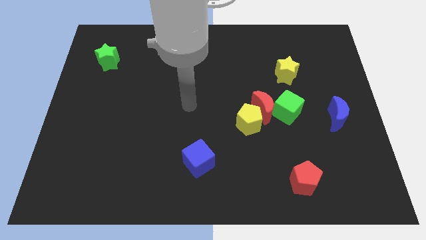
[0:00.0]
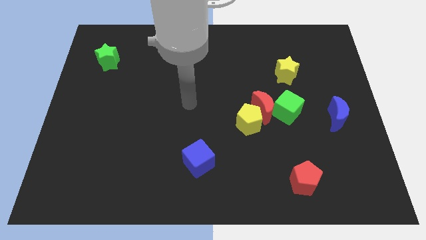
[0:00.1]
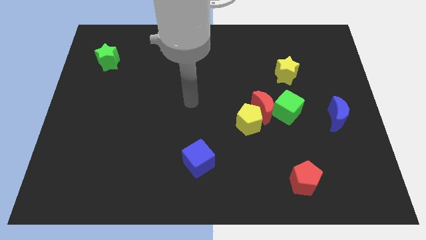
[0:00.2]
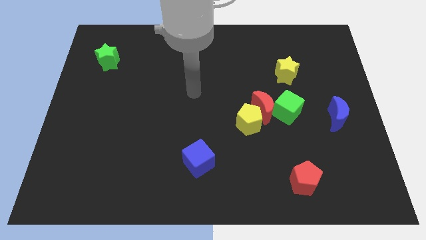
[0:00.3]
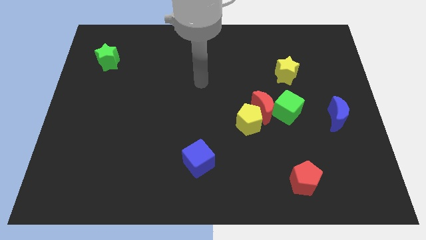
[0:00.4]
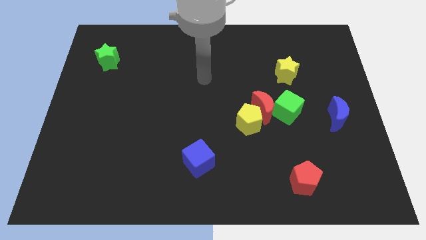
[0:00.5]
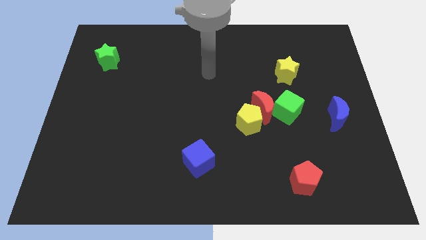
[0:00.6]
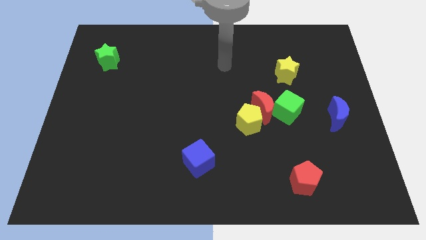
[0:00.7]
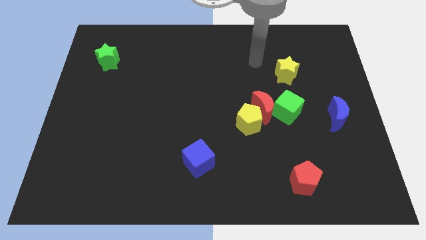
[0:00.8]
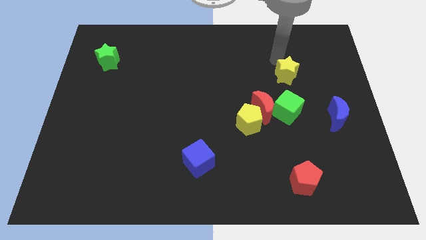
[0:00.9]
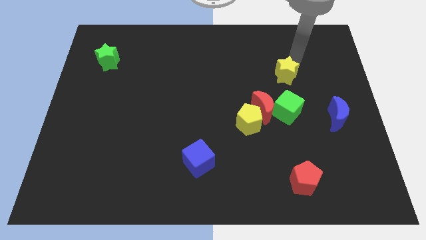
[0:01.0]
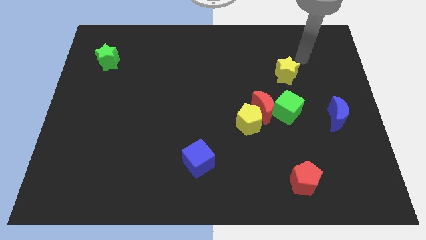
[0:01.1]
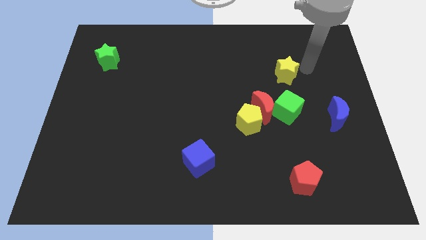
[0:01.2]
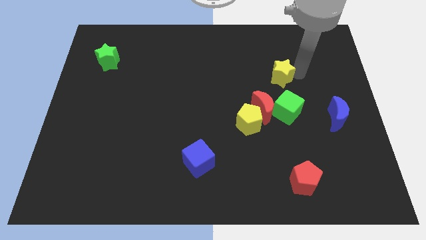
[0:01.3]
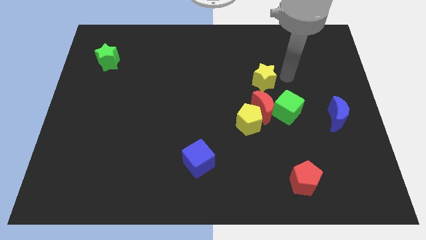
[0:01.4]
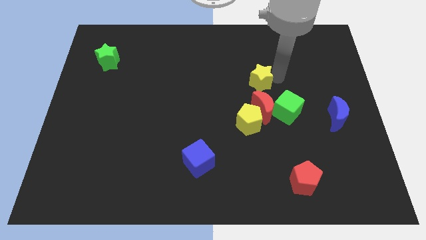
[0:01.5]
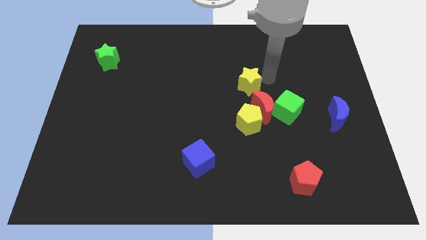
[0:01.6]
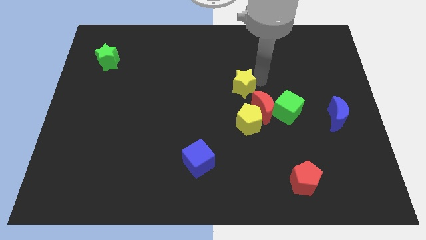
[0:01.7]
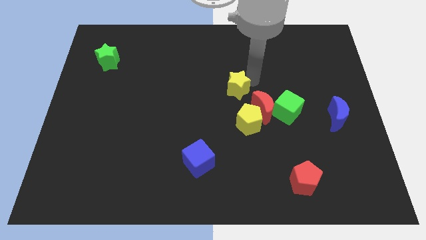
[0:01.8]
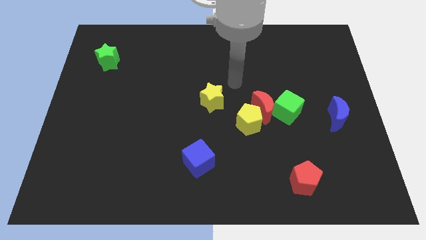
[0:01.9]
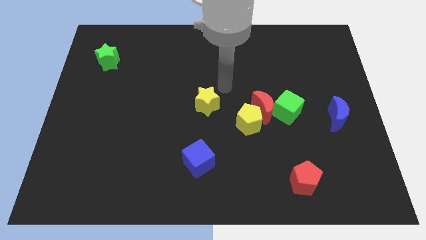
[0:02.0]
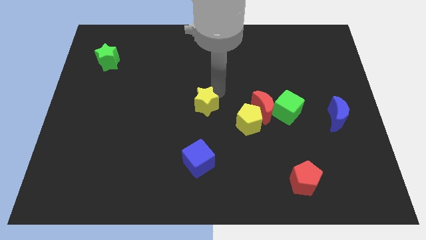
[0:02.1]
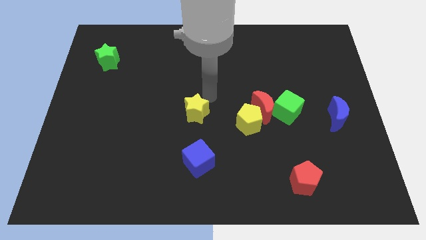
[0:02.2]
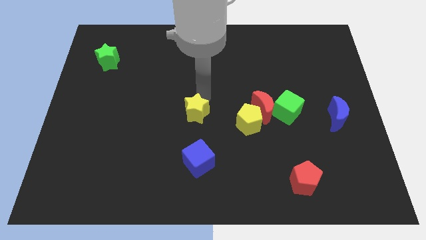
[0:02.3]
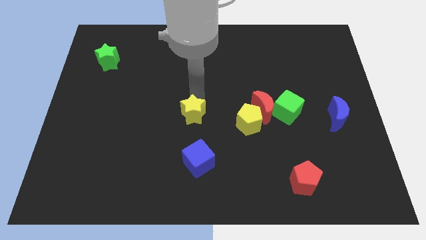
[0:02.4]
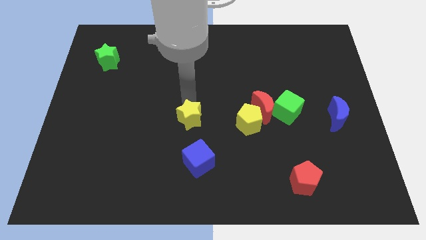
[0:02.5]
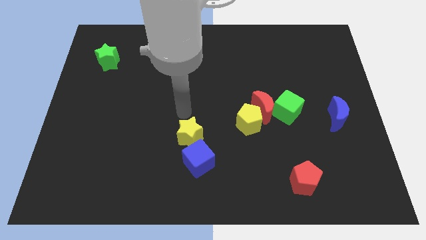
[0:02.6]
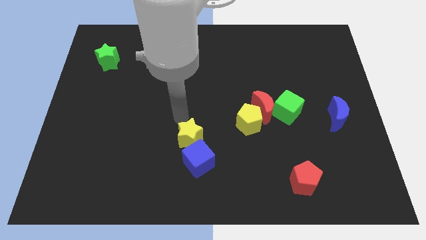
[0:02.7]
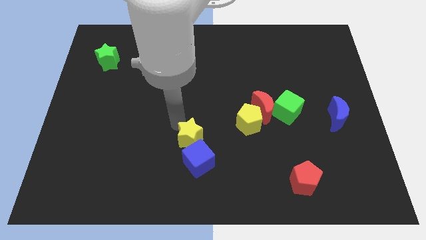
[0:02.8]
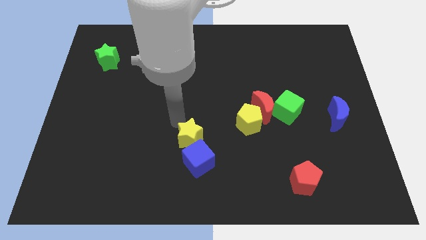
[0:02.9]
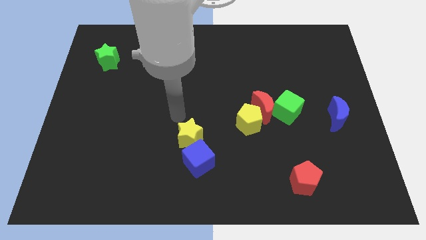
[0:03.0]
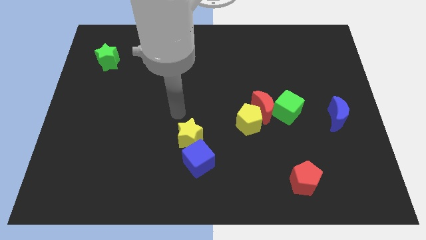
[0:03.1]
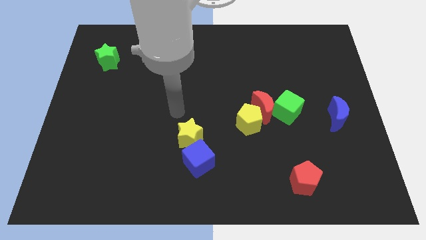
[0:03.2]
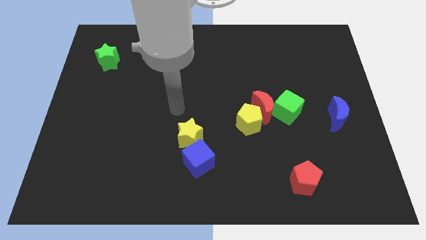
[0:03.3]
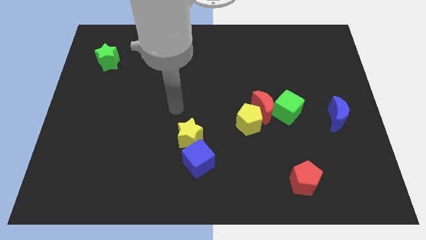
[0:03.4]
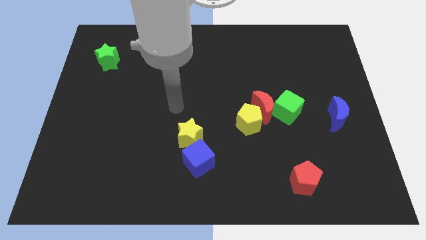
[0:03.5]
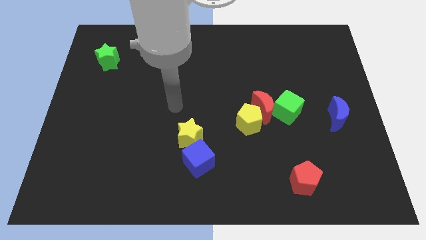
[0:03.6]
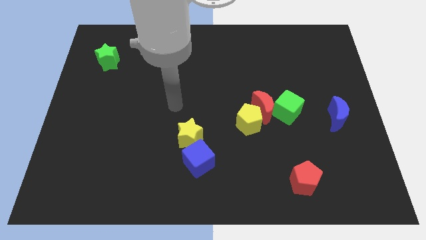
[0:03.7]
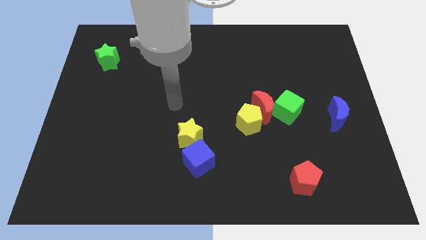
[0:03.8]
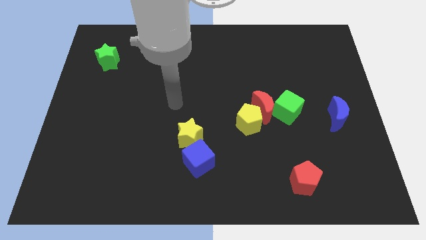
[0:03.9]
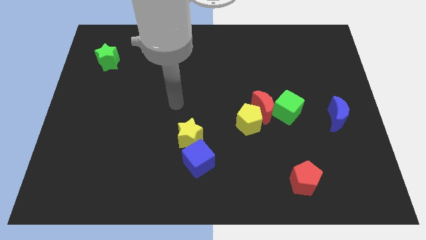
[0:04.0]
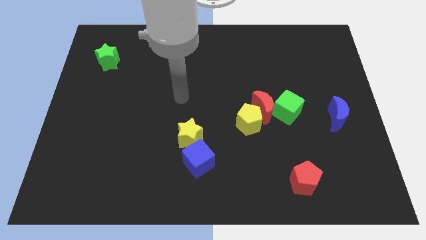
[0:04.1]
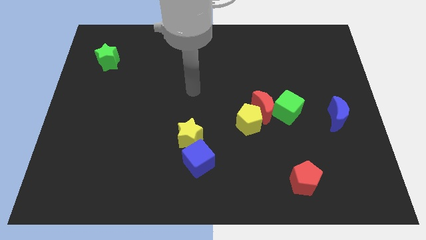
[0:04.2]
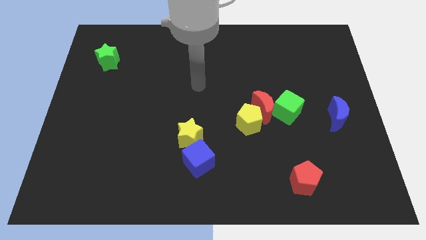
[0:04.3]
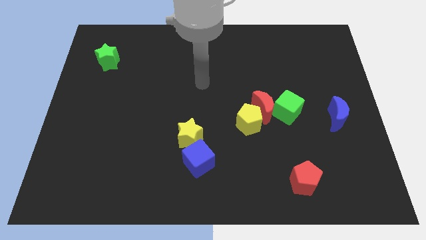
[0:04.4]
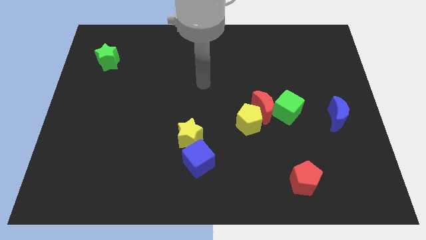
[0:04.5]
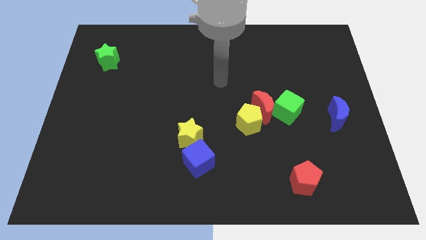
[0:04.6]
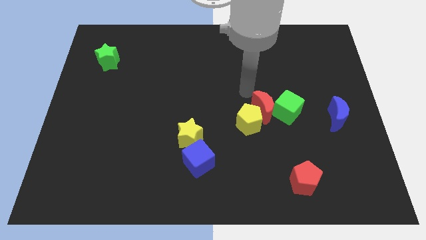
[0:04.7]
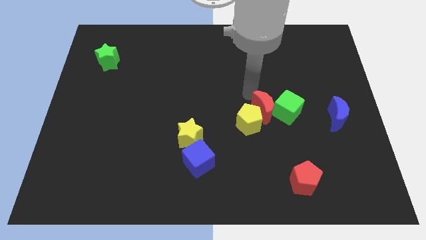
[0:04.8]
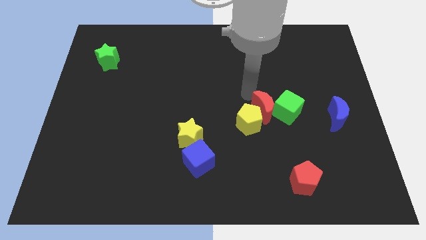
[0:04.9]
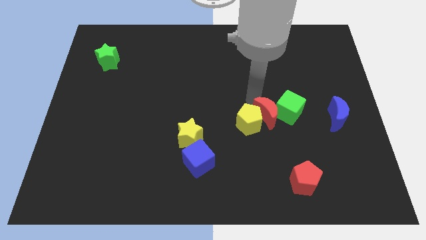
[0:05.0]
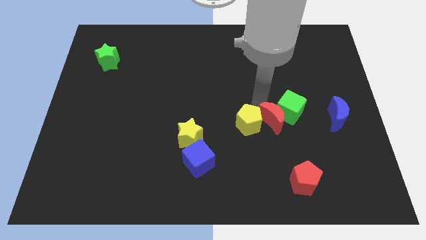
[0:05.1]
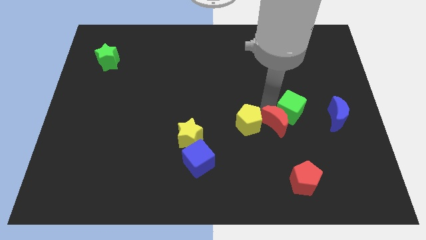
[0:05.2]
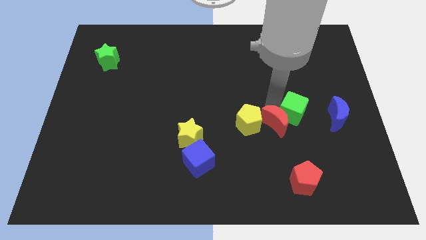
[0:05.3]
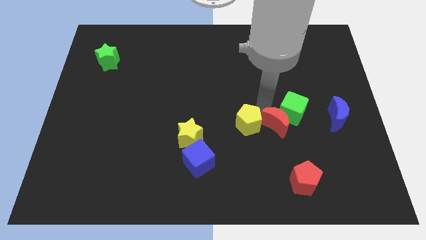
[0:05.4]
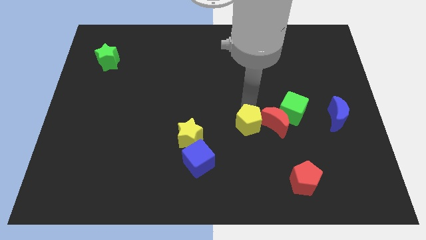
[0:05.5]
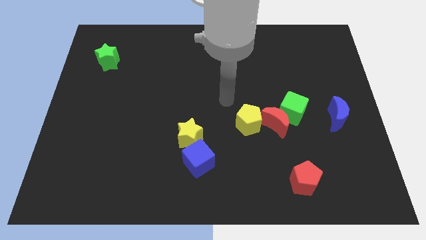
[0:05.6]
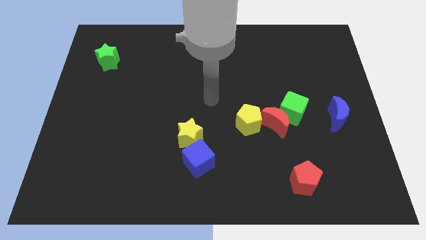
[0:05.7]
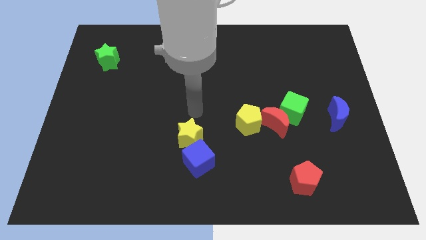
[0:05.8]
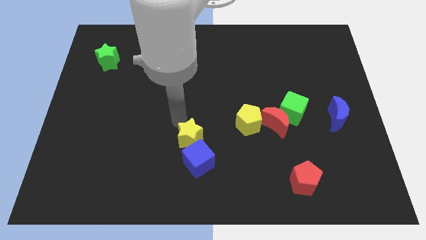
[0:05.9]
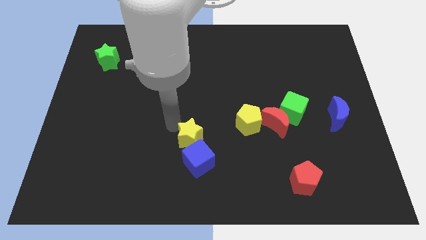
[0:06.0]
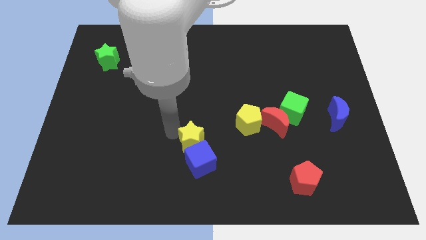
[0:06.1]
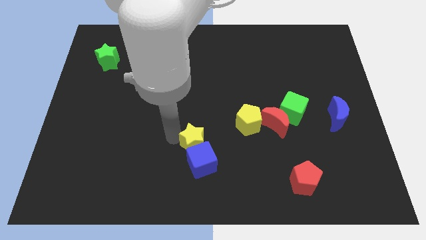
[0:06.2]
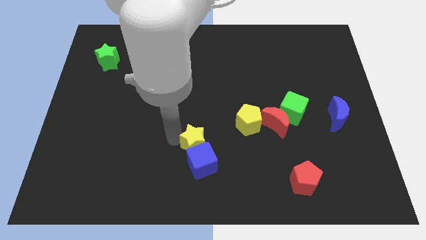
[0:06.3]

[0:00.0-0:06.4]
slide the yellow star towards the blue cube

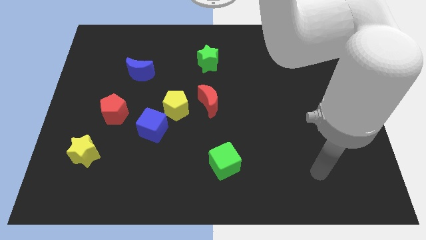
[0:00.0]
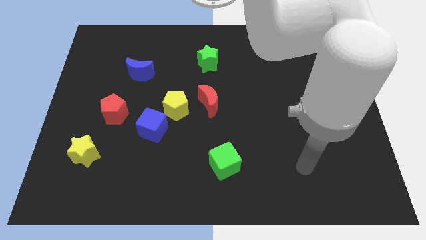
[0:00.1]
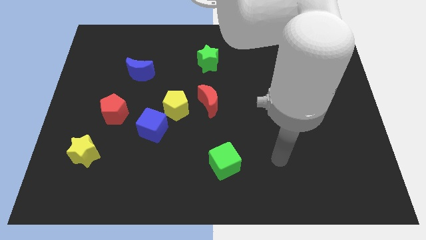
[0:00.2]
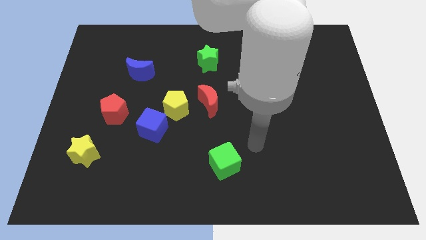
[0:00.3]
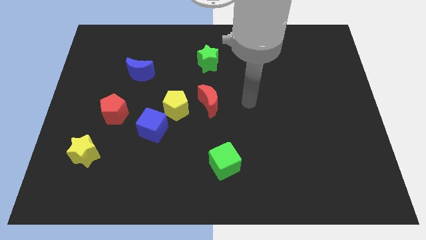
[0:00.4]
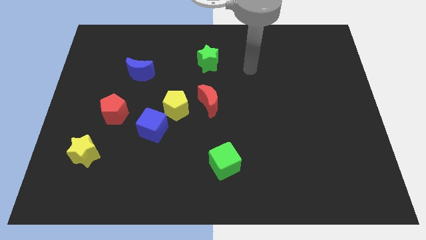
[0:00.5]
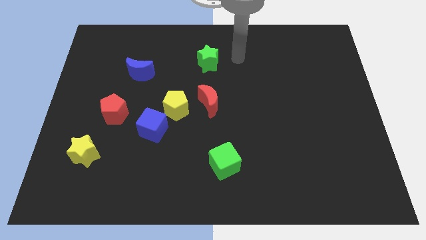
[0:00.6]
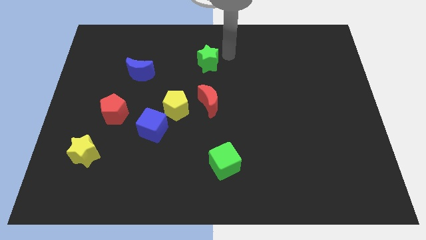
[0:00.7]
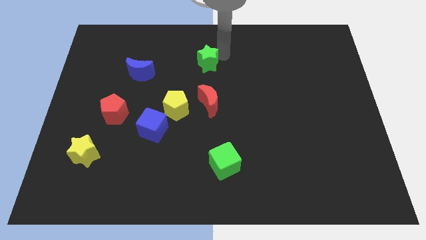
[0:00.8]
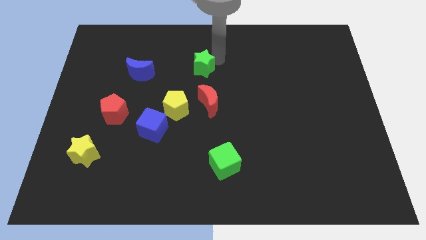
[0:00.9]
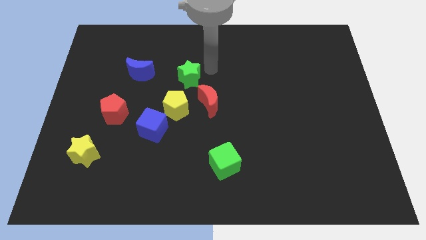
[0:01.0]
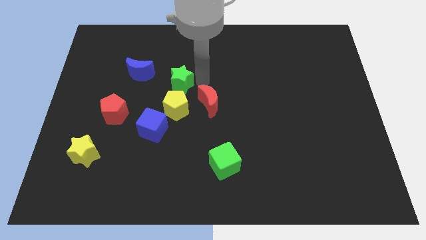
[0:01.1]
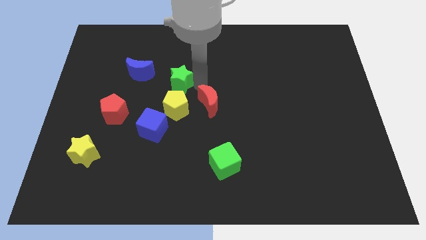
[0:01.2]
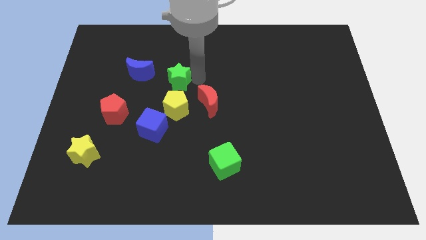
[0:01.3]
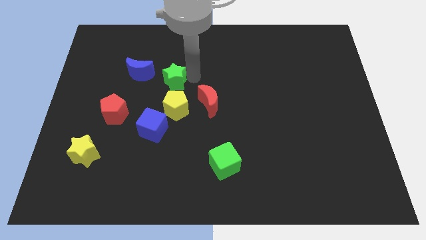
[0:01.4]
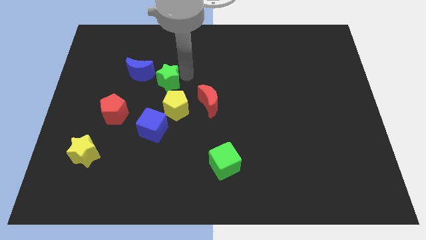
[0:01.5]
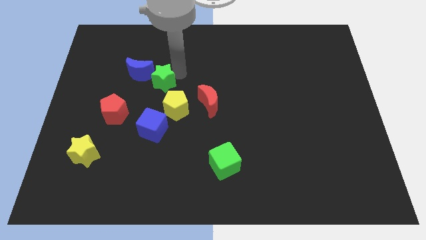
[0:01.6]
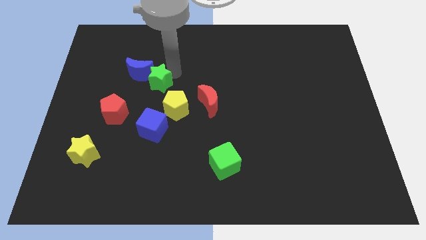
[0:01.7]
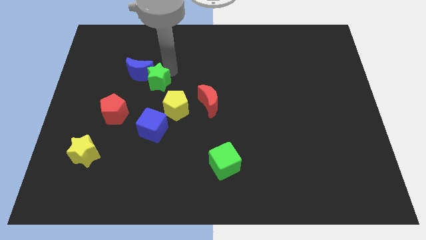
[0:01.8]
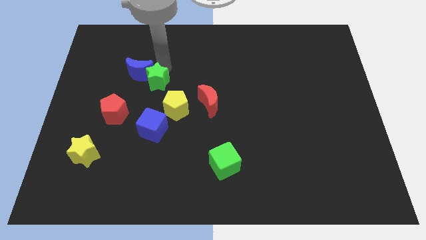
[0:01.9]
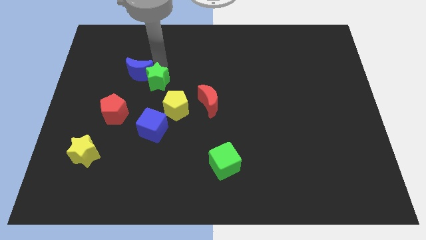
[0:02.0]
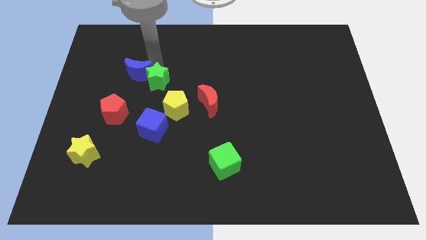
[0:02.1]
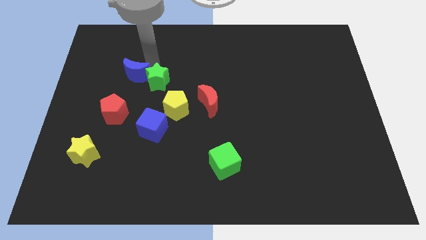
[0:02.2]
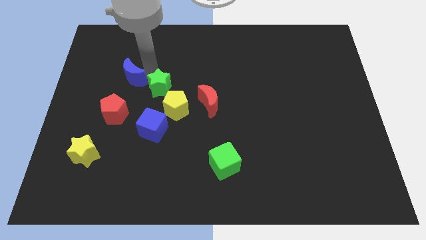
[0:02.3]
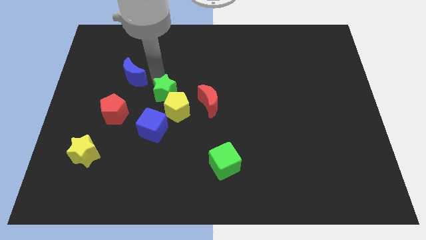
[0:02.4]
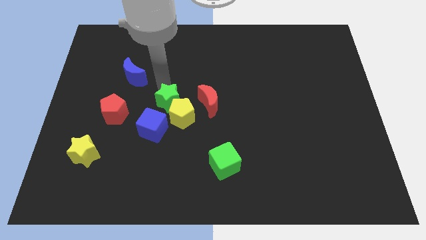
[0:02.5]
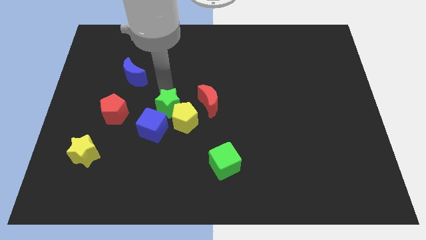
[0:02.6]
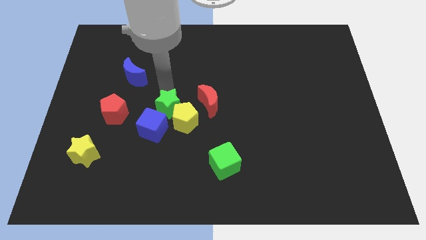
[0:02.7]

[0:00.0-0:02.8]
push the green star towards the yellow pentagon
